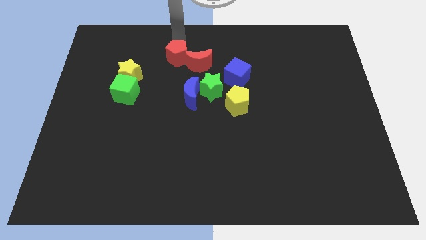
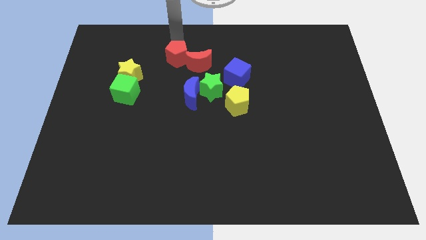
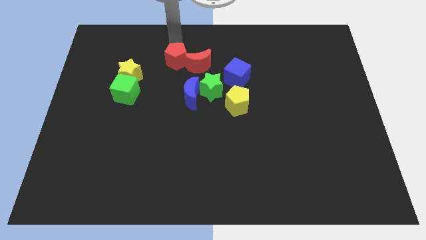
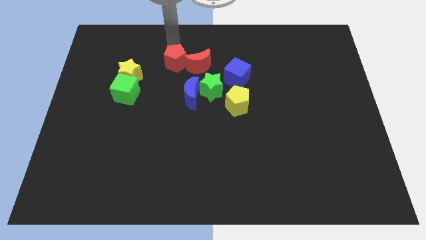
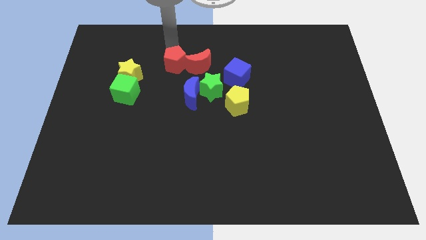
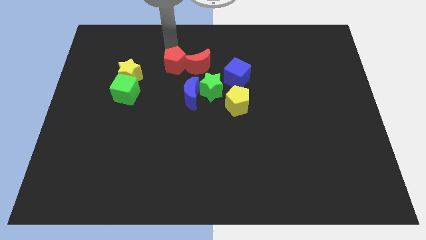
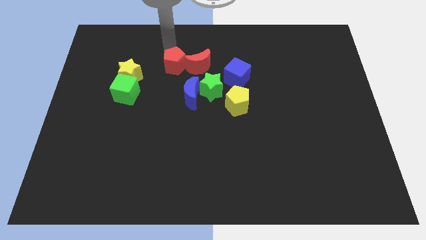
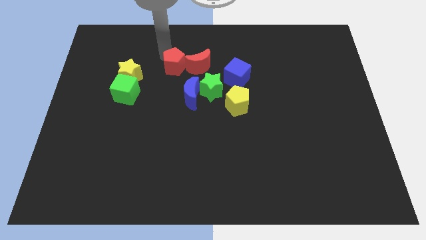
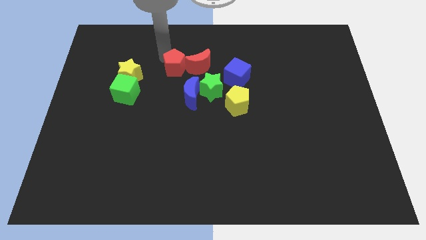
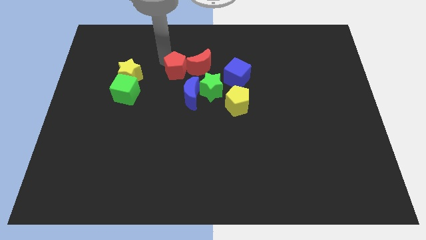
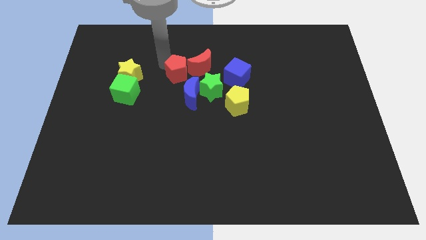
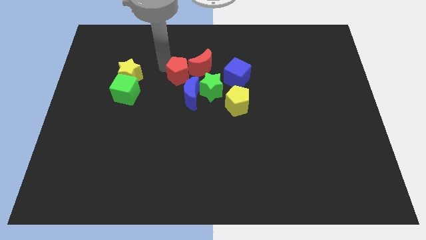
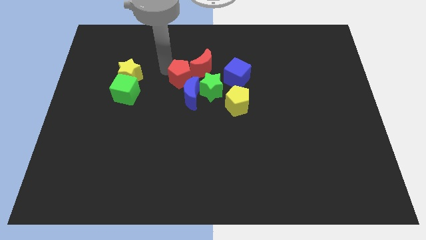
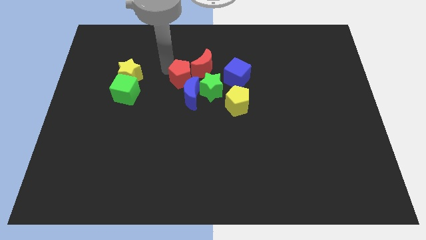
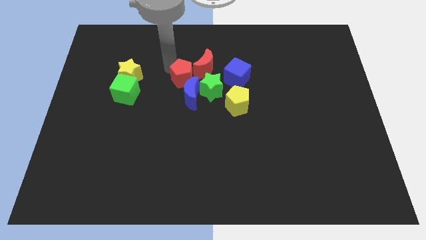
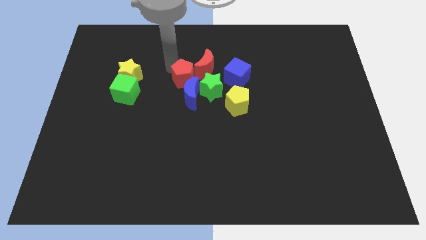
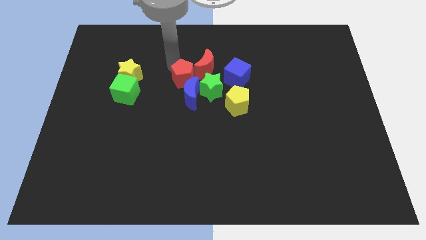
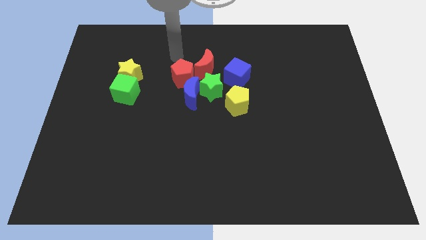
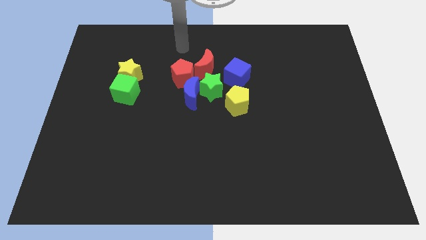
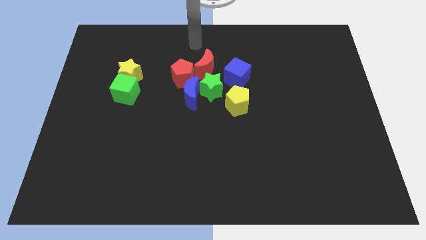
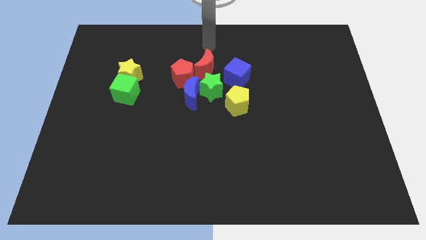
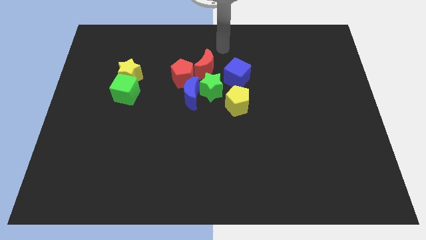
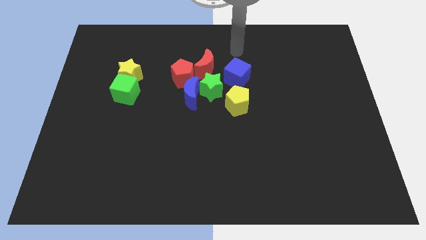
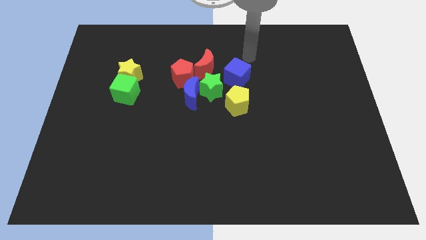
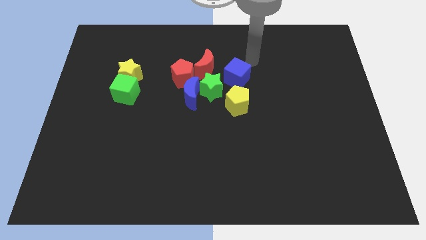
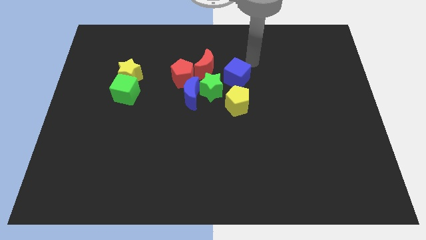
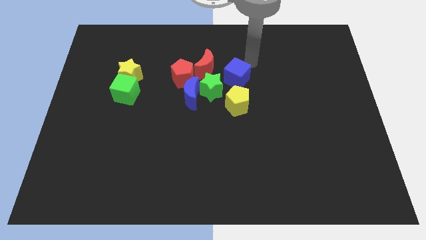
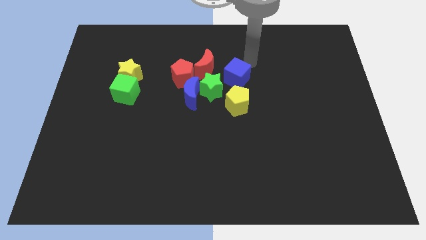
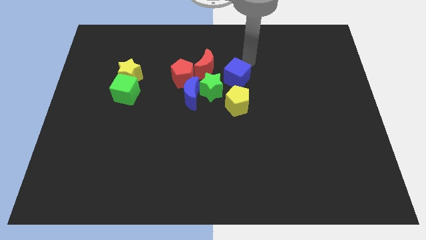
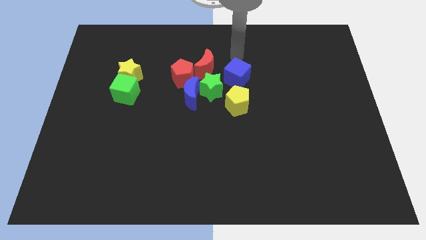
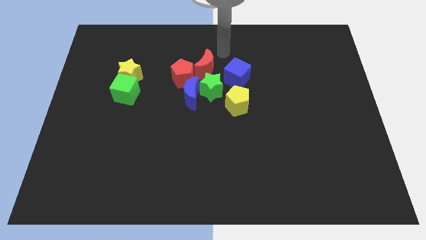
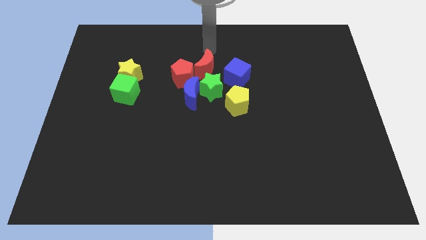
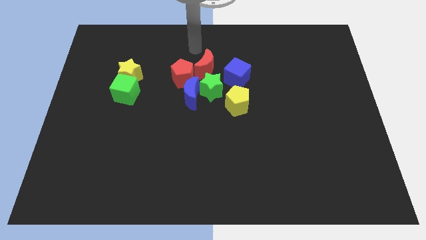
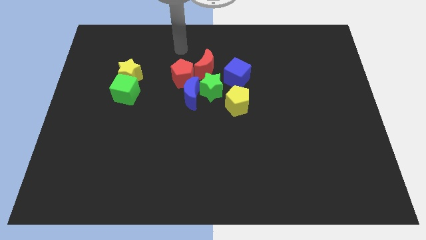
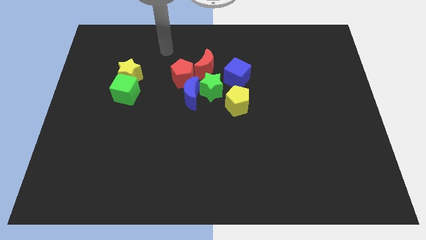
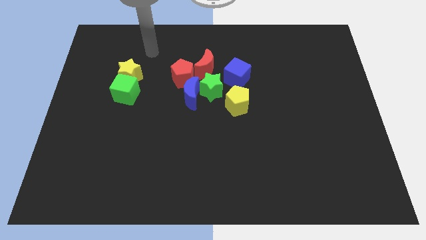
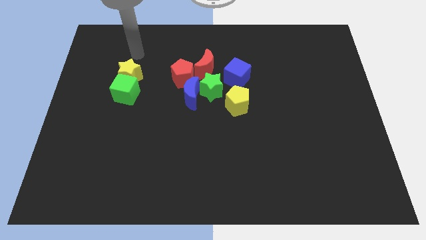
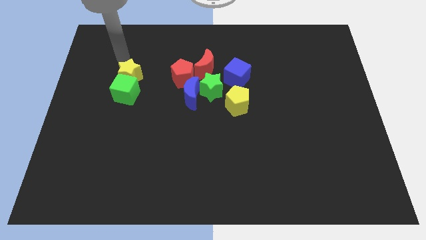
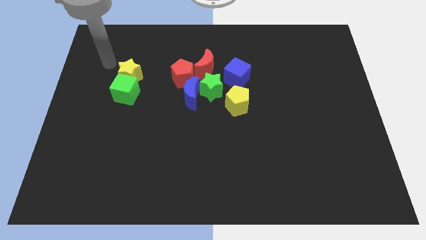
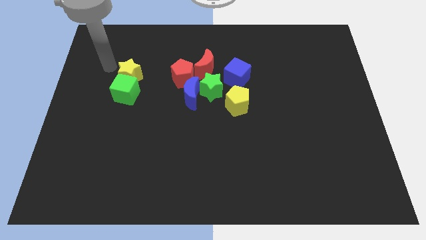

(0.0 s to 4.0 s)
push the red pentagon to the blue moon

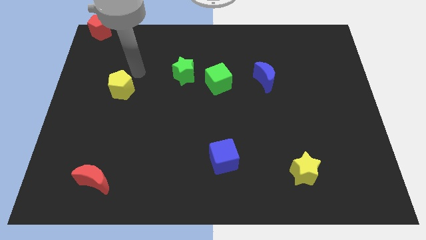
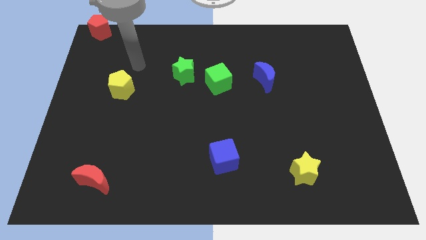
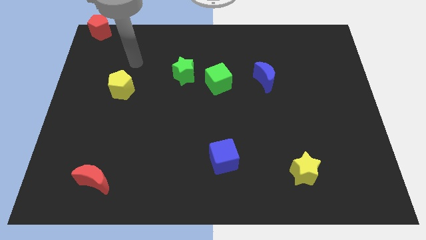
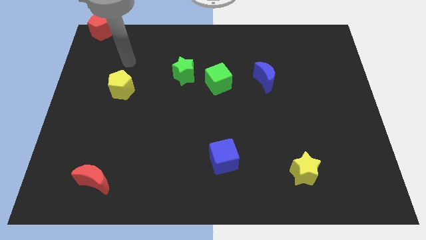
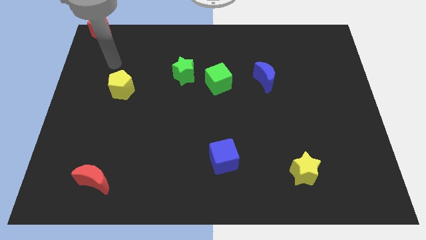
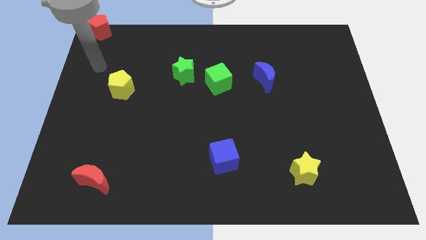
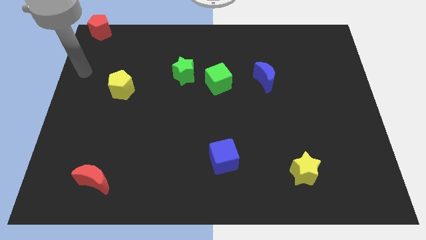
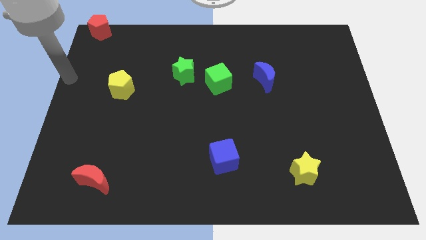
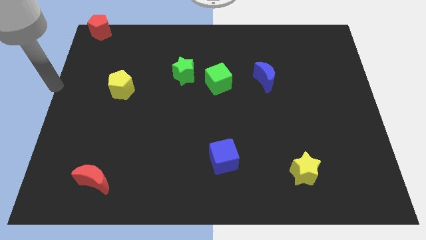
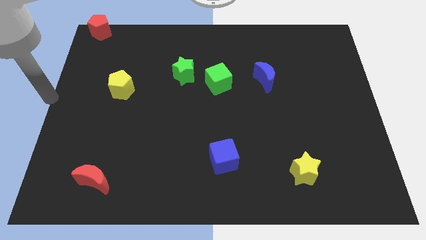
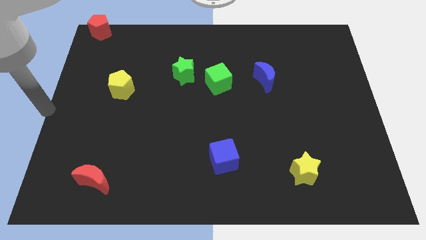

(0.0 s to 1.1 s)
point your arm at the center left side of the board

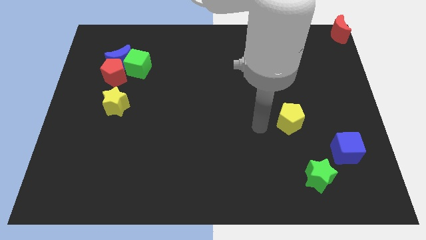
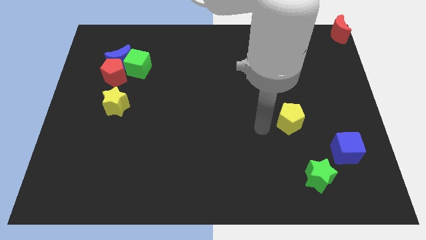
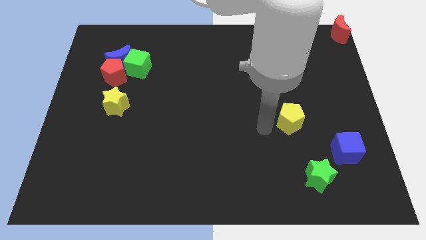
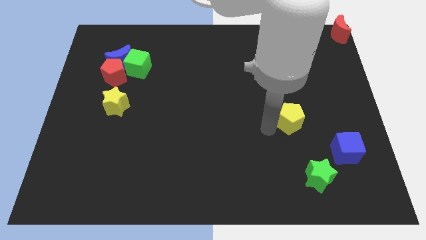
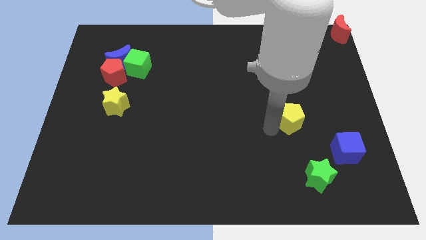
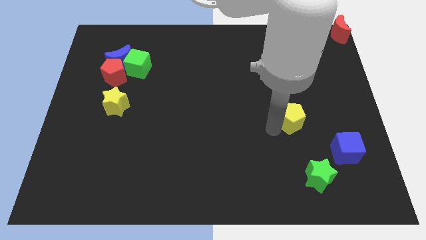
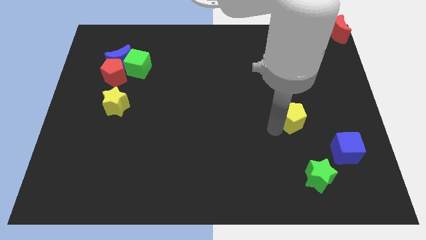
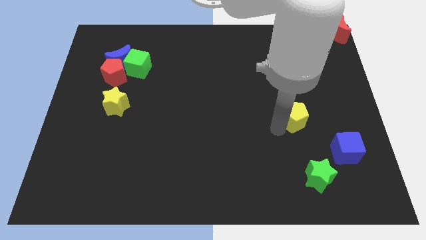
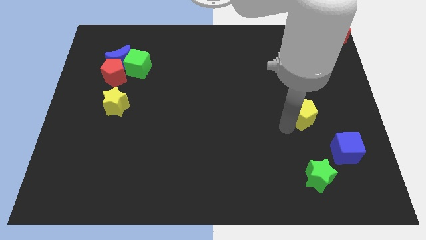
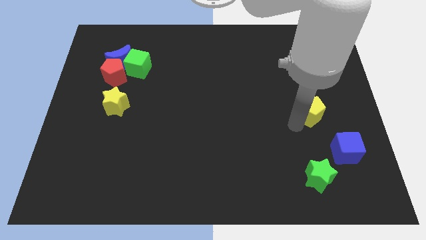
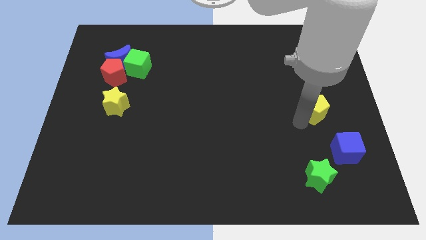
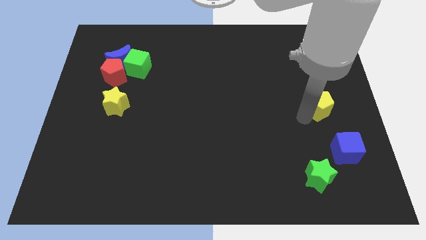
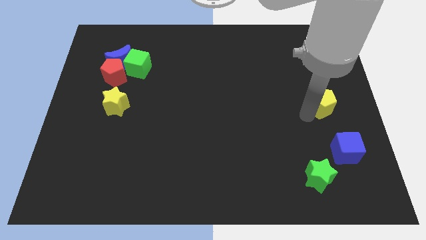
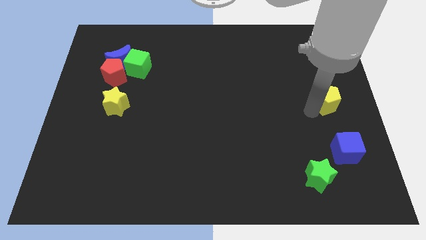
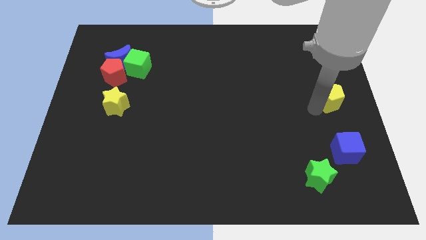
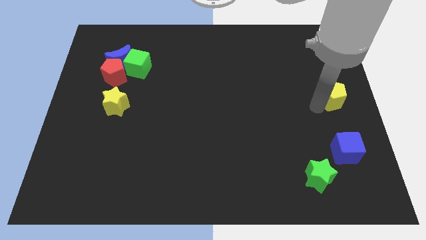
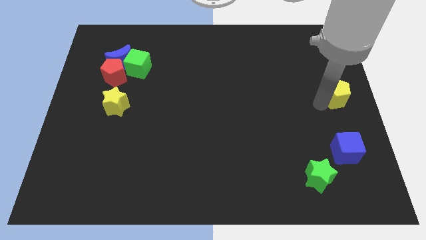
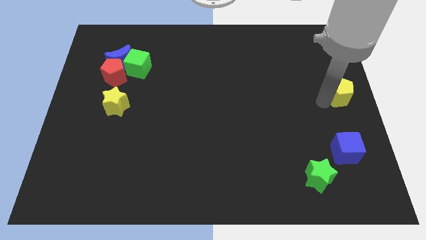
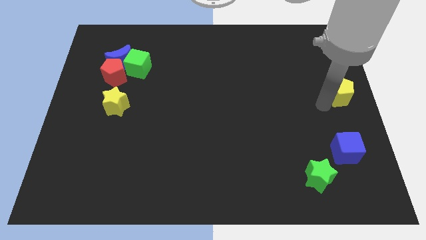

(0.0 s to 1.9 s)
move the yellow pentagon to the top side of the blue cube

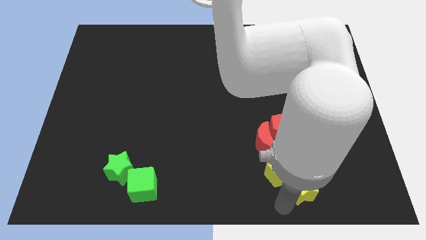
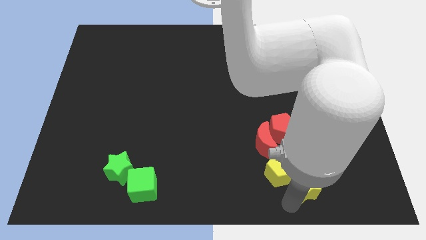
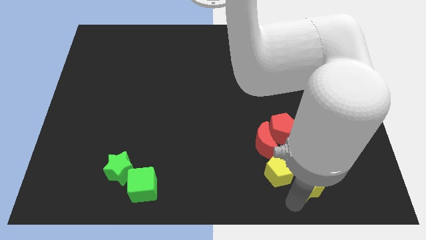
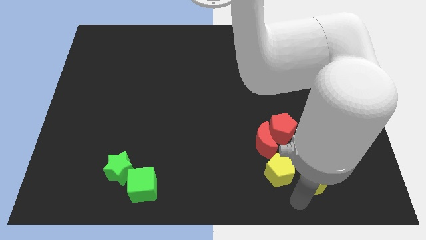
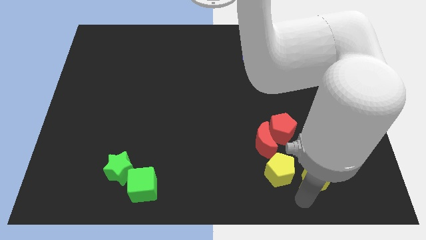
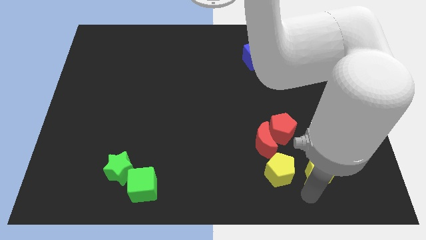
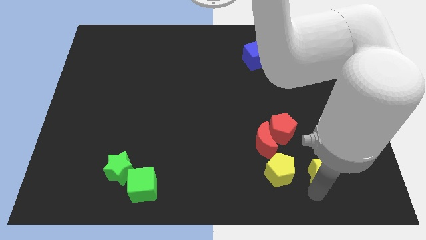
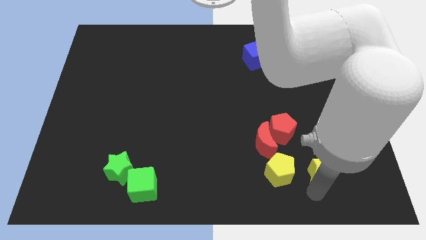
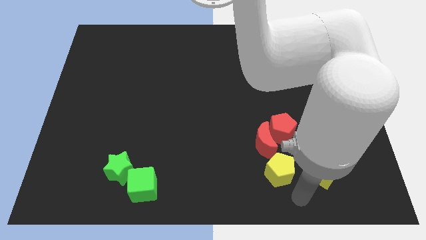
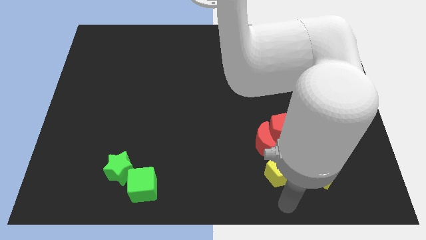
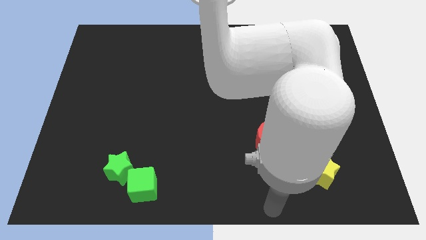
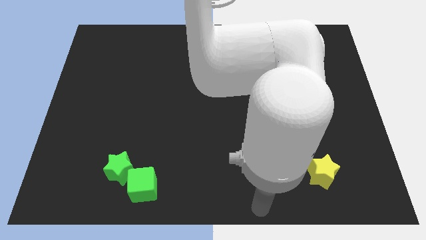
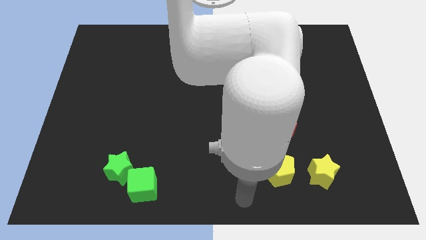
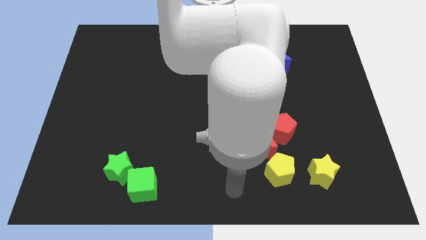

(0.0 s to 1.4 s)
separate the yellow star and the yellow pentagon

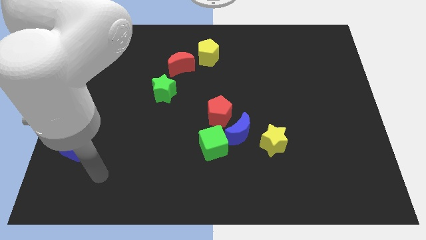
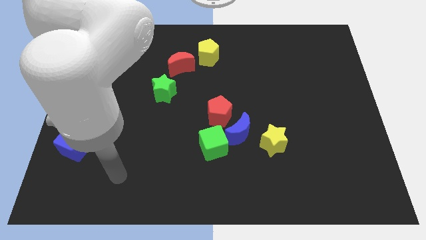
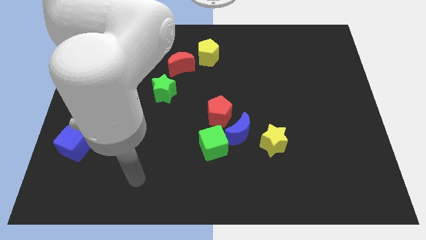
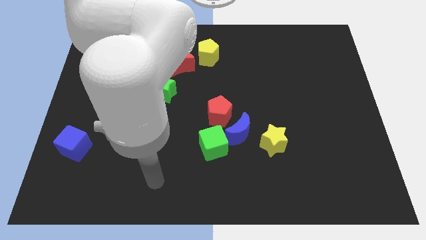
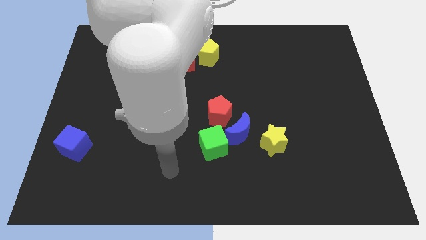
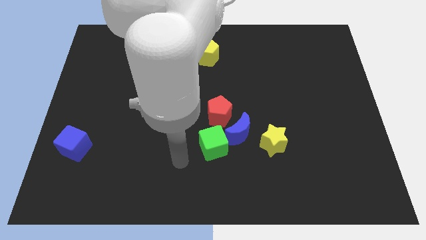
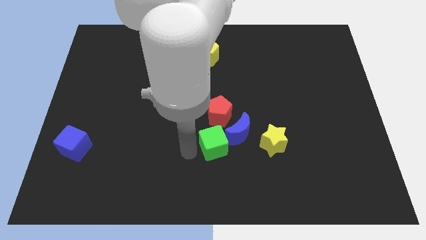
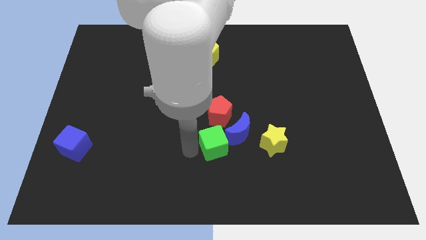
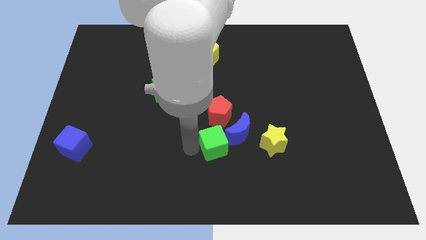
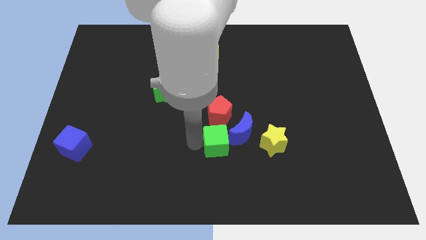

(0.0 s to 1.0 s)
touch the left side of the green cube
